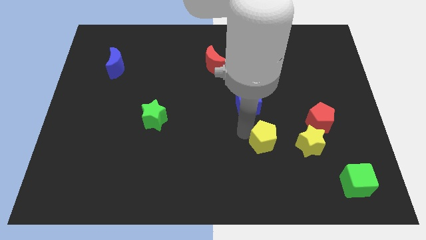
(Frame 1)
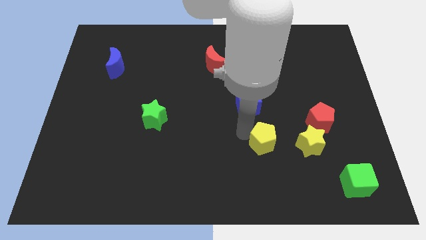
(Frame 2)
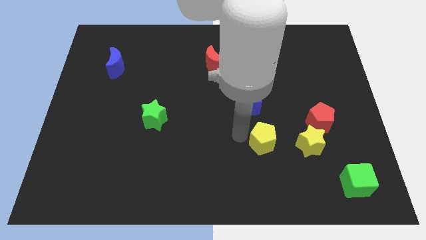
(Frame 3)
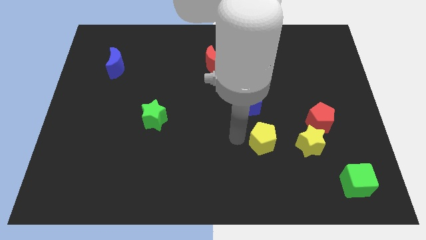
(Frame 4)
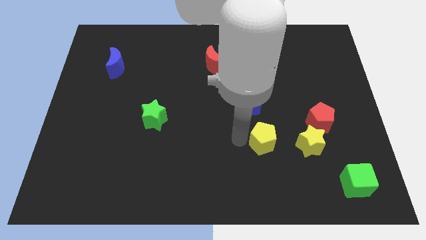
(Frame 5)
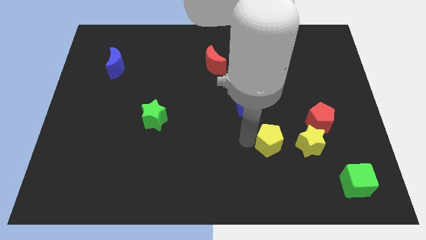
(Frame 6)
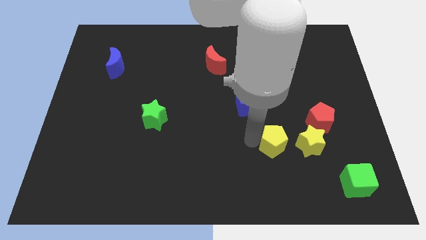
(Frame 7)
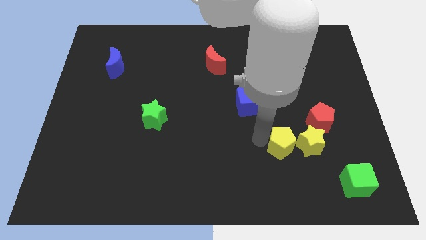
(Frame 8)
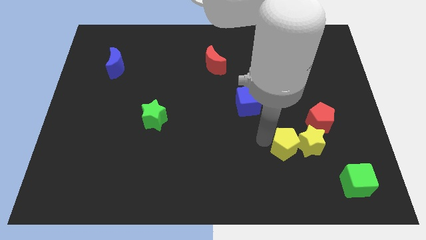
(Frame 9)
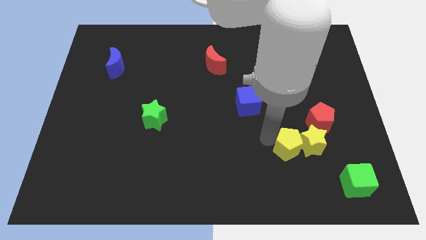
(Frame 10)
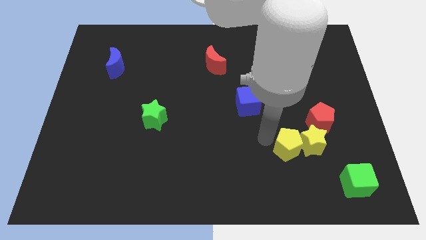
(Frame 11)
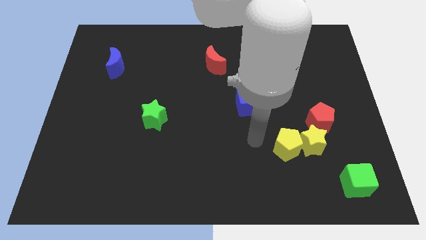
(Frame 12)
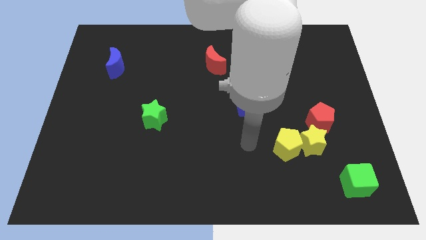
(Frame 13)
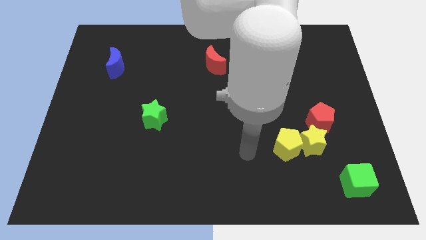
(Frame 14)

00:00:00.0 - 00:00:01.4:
move yellow pentagon into the yellow star

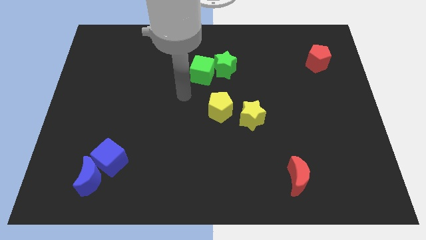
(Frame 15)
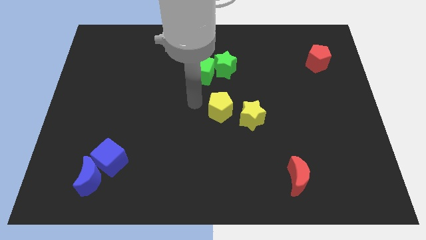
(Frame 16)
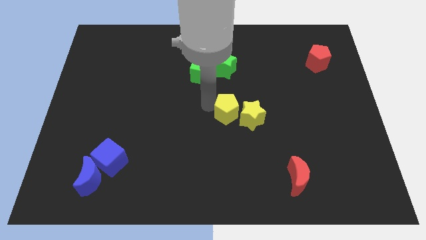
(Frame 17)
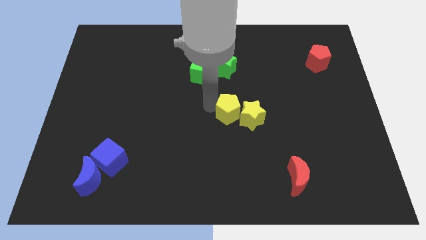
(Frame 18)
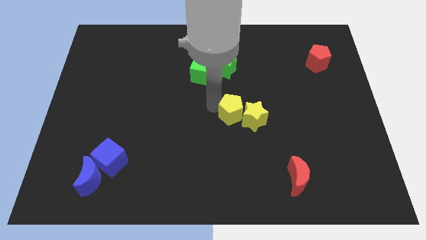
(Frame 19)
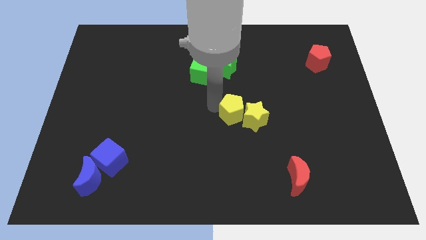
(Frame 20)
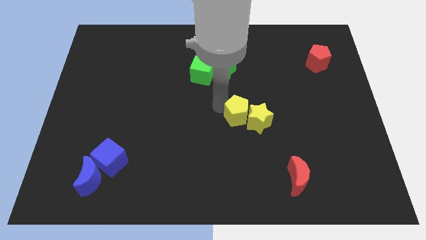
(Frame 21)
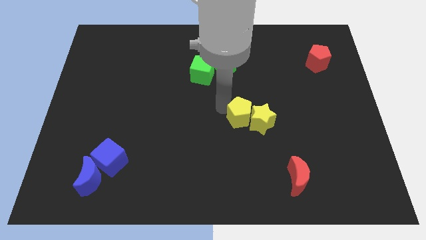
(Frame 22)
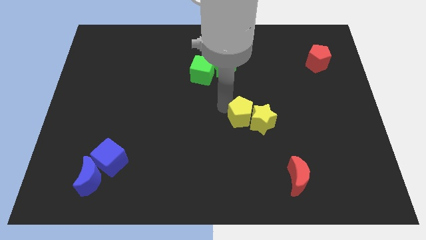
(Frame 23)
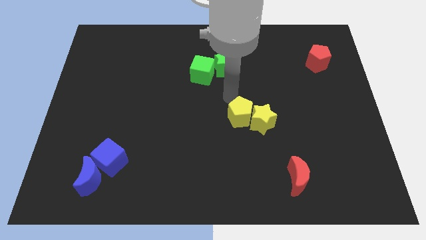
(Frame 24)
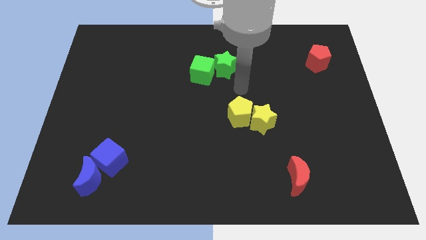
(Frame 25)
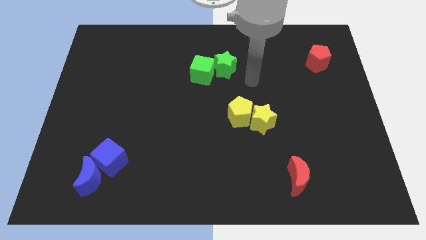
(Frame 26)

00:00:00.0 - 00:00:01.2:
push the yellow blocks towards the right side

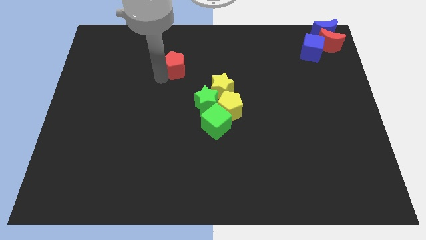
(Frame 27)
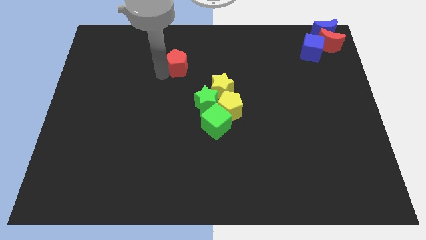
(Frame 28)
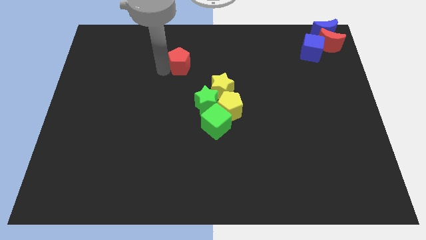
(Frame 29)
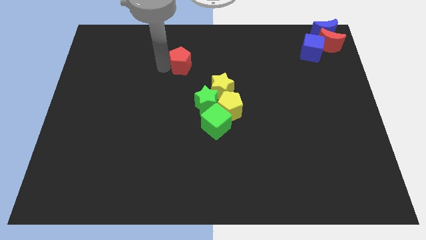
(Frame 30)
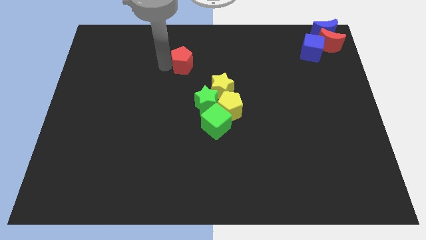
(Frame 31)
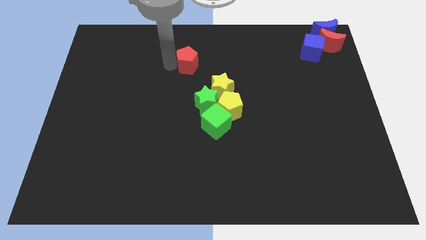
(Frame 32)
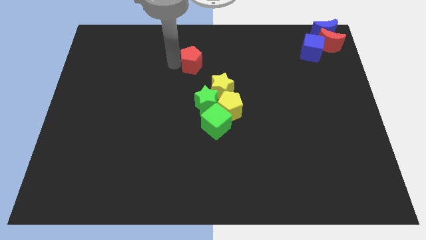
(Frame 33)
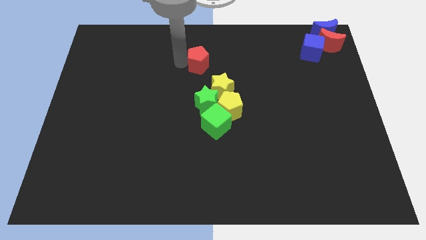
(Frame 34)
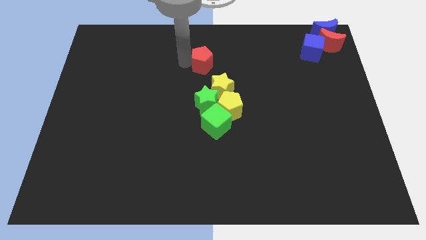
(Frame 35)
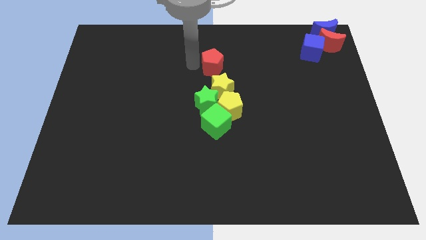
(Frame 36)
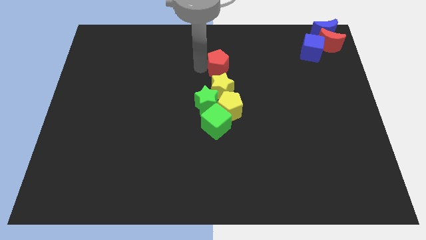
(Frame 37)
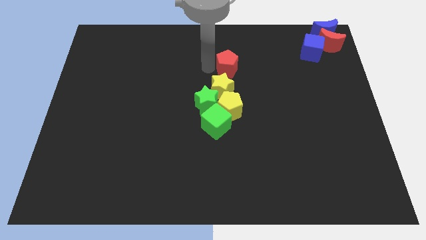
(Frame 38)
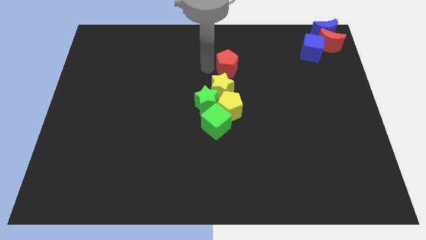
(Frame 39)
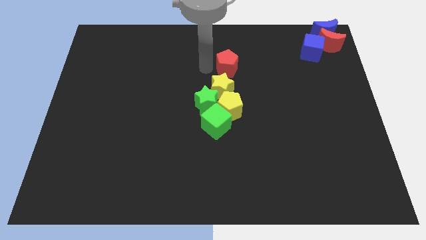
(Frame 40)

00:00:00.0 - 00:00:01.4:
slightly move the red crescent towards the left side of the board

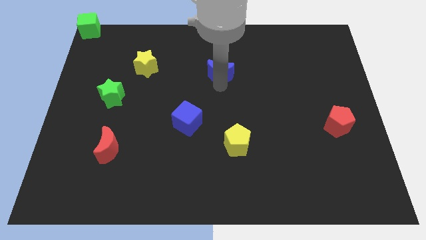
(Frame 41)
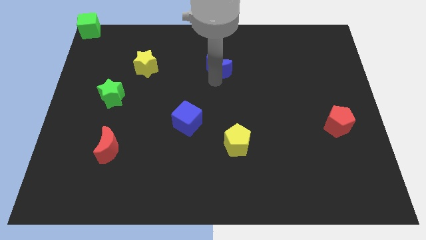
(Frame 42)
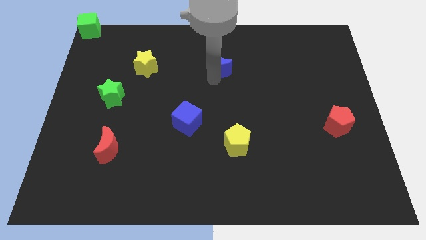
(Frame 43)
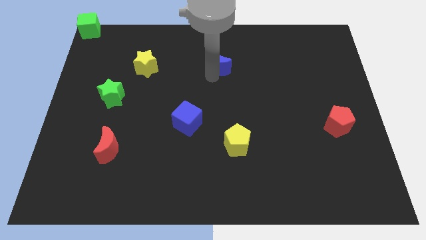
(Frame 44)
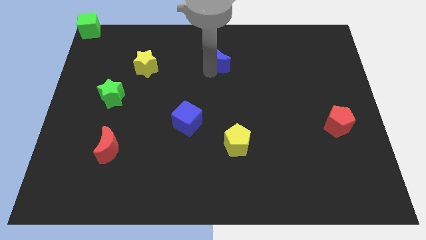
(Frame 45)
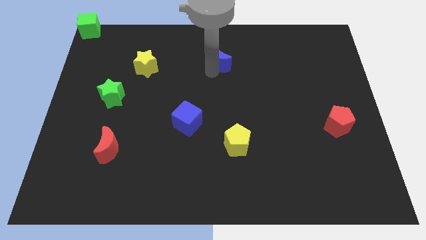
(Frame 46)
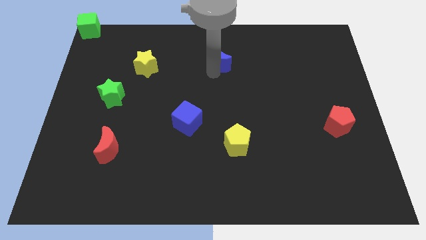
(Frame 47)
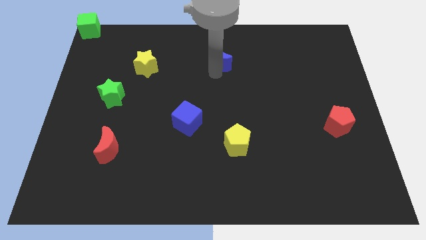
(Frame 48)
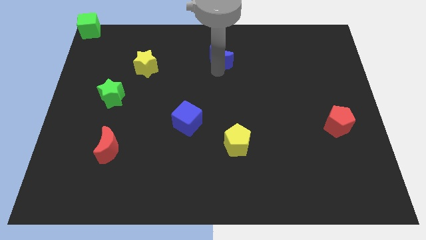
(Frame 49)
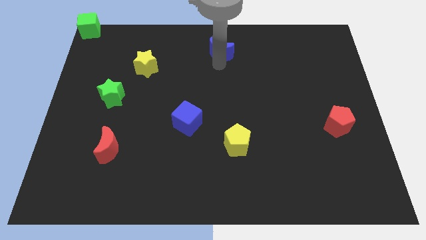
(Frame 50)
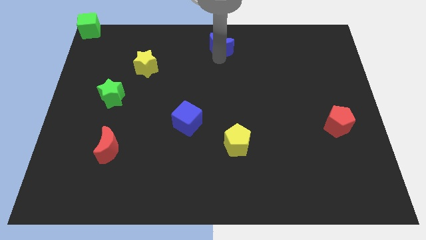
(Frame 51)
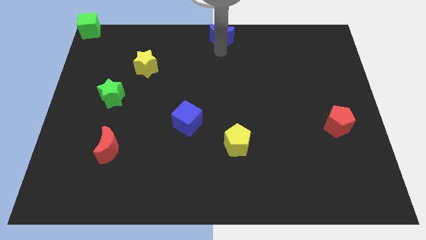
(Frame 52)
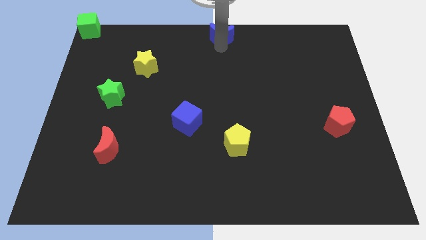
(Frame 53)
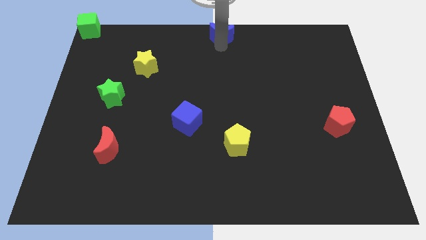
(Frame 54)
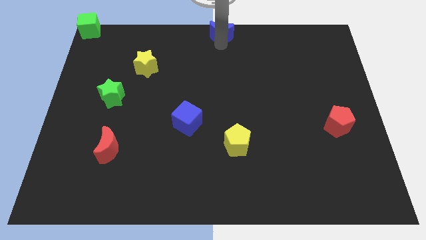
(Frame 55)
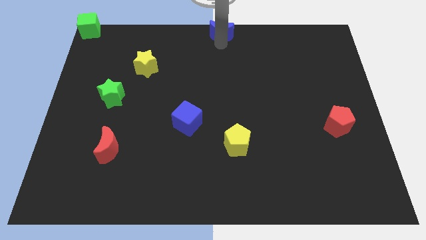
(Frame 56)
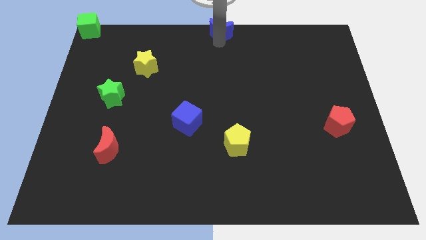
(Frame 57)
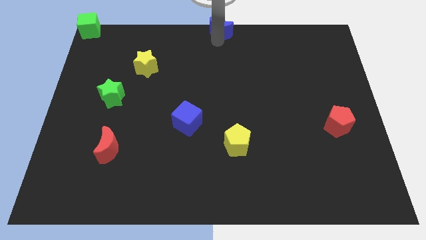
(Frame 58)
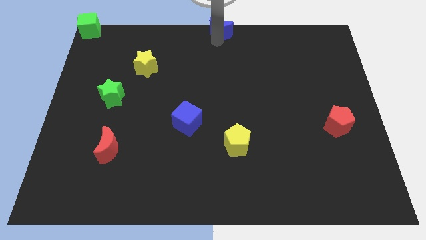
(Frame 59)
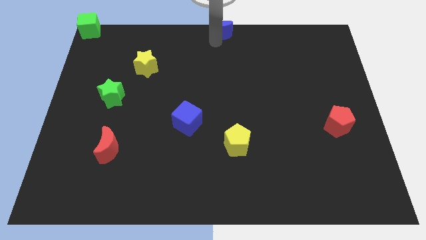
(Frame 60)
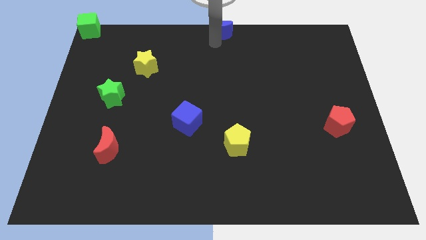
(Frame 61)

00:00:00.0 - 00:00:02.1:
push the blue moon to the top middle of the board

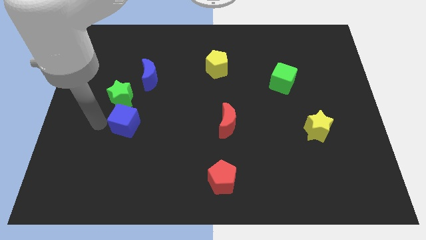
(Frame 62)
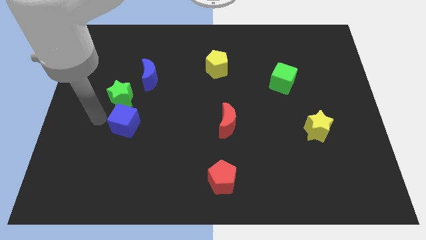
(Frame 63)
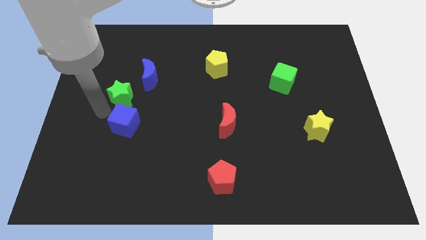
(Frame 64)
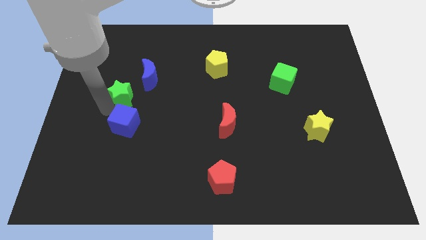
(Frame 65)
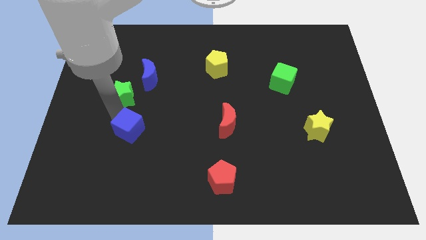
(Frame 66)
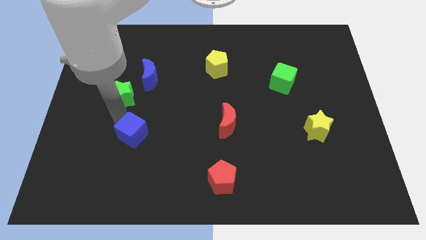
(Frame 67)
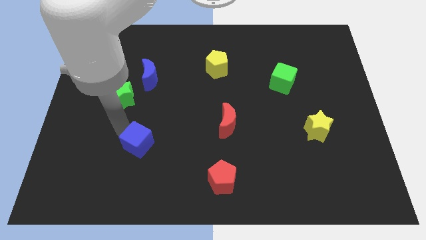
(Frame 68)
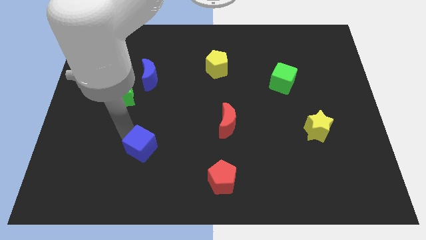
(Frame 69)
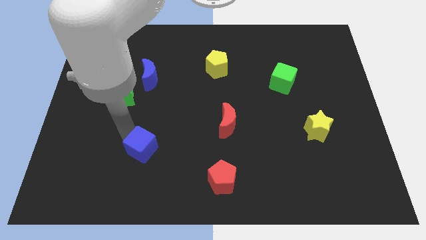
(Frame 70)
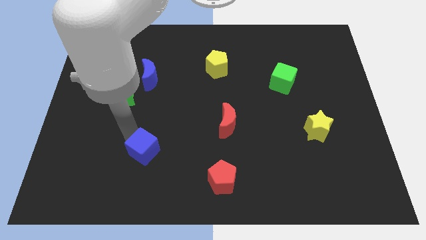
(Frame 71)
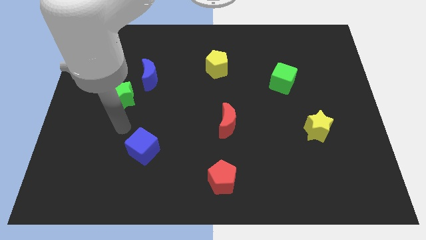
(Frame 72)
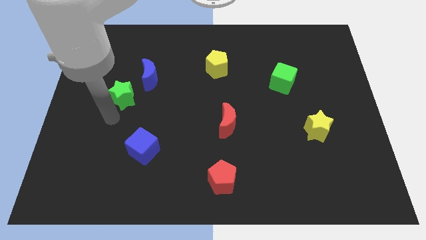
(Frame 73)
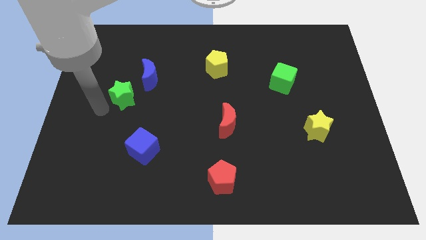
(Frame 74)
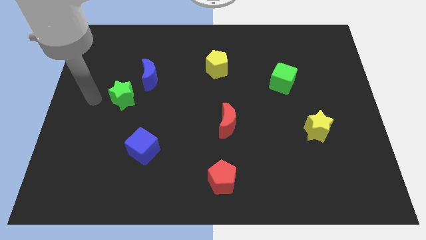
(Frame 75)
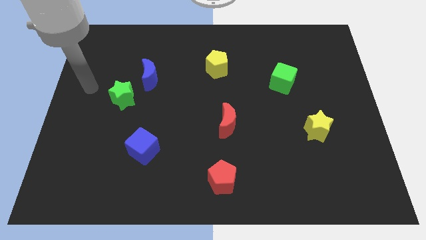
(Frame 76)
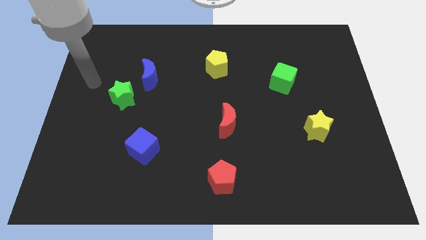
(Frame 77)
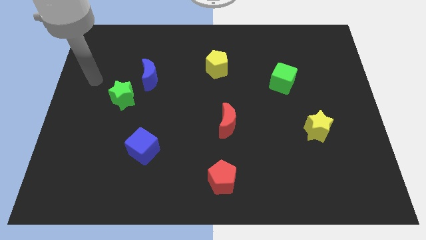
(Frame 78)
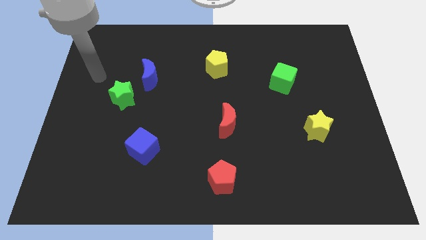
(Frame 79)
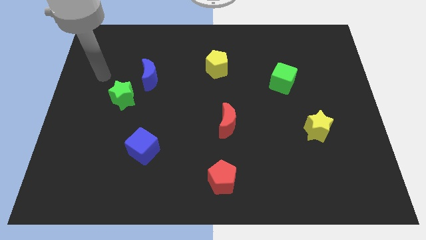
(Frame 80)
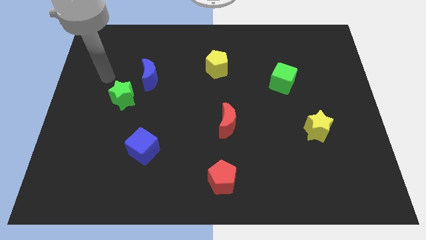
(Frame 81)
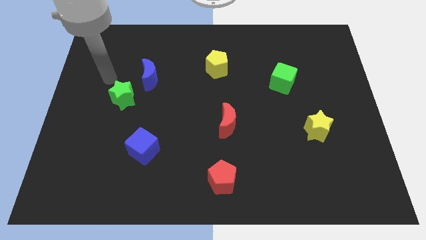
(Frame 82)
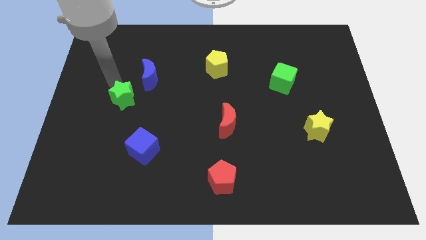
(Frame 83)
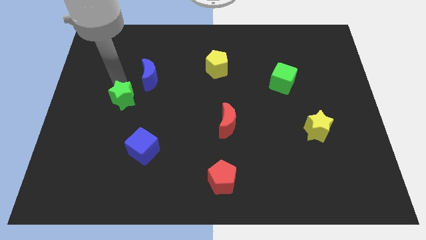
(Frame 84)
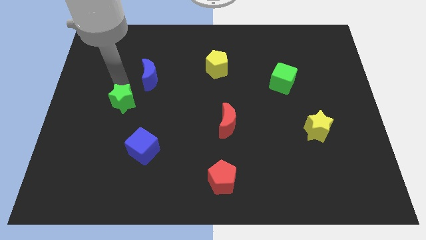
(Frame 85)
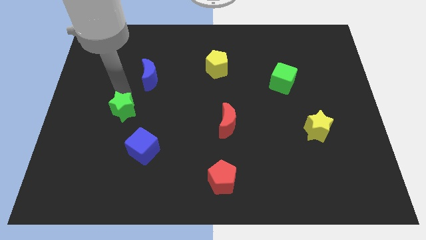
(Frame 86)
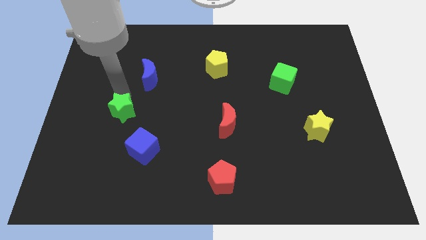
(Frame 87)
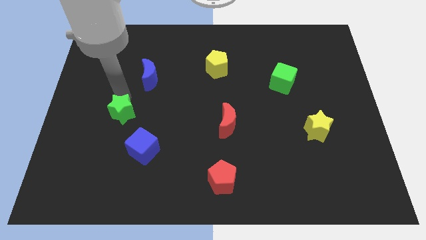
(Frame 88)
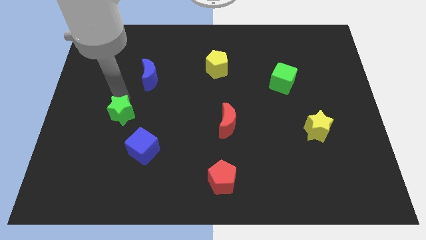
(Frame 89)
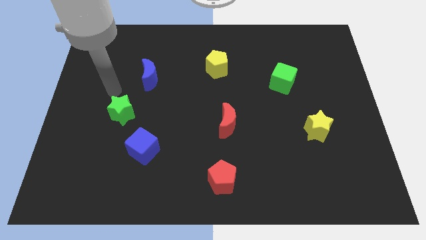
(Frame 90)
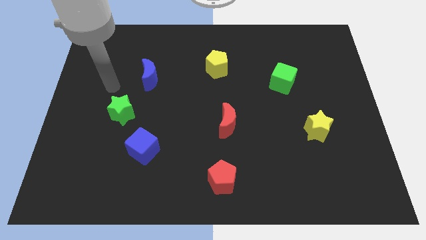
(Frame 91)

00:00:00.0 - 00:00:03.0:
slightly move the green star towards the top left side of the blue cube
